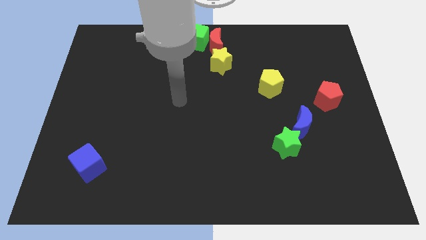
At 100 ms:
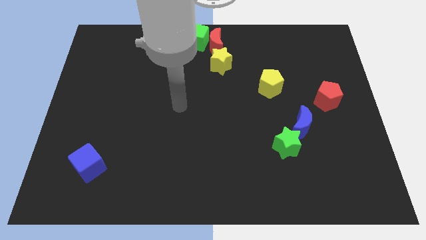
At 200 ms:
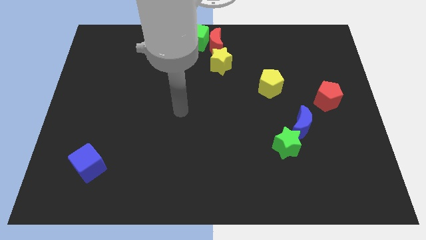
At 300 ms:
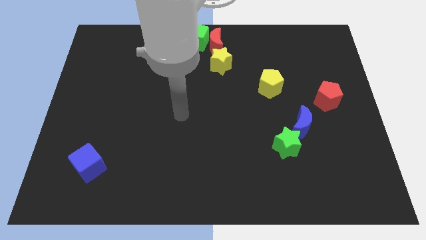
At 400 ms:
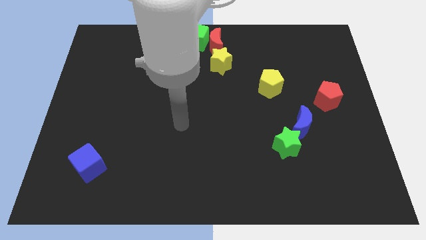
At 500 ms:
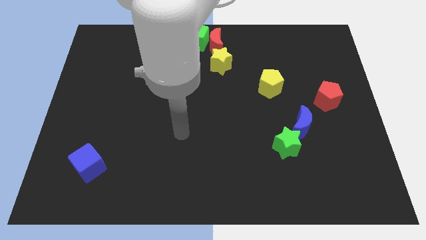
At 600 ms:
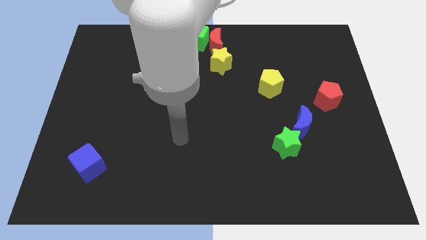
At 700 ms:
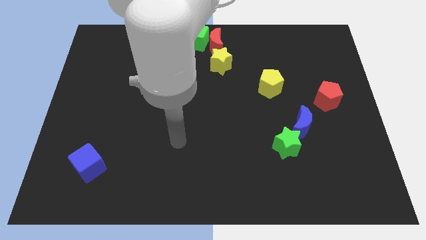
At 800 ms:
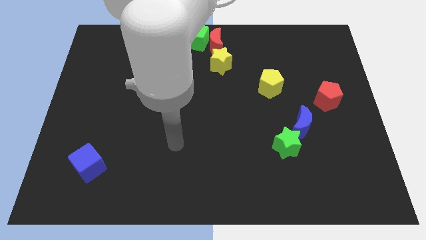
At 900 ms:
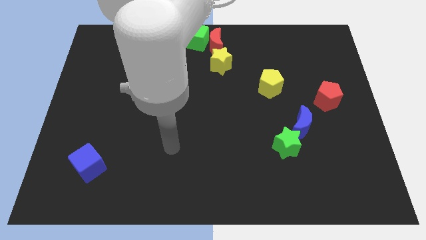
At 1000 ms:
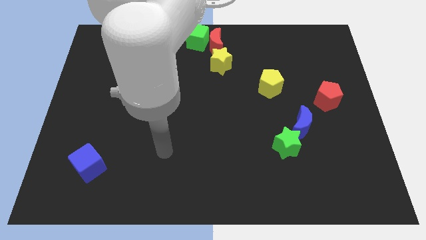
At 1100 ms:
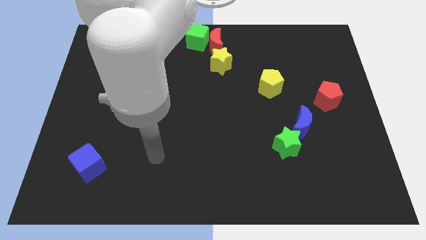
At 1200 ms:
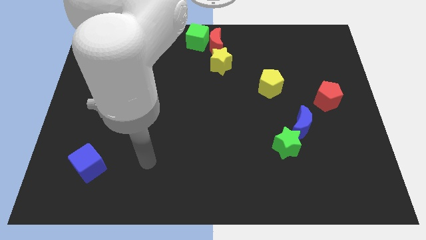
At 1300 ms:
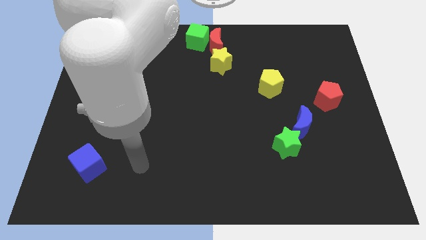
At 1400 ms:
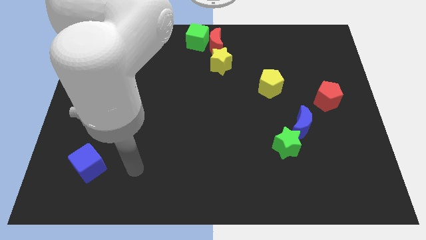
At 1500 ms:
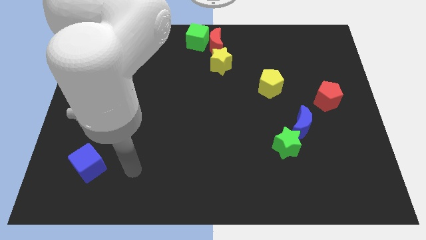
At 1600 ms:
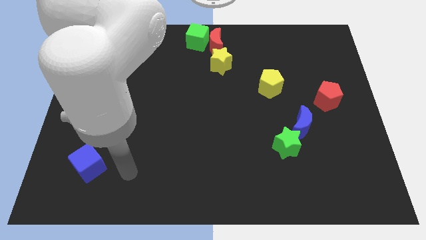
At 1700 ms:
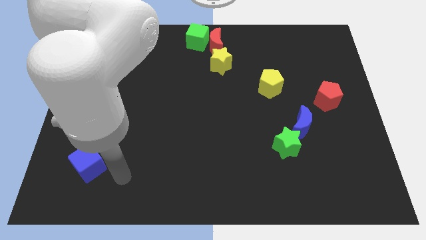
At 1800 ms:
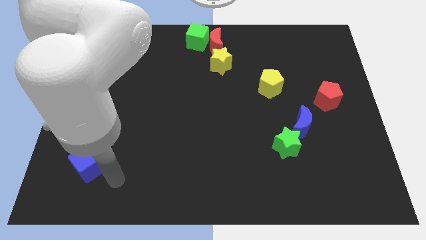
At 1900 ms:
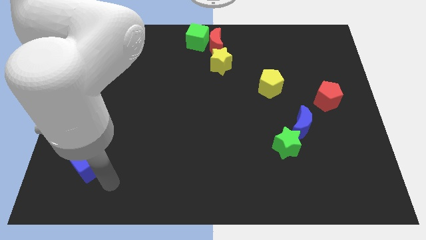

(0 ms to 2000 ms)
place blue cube to the right of the blue cube

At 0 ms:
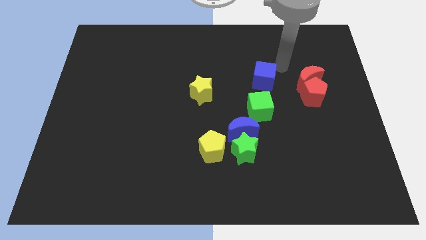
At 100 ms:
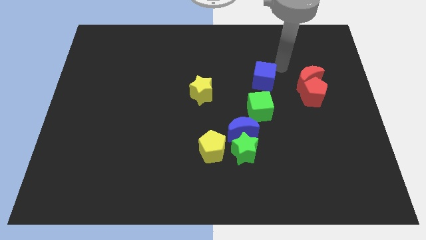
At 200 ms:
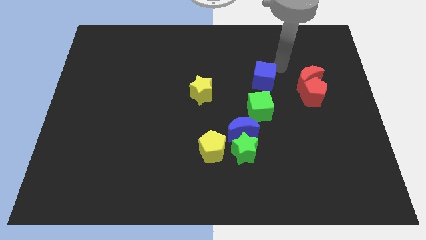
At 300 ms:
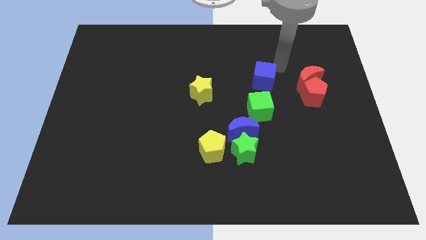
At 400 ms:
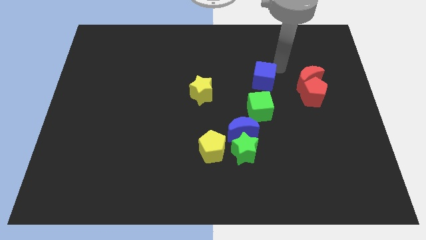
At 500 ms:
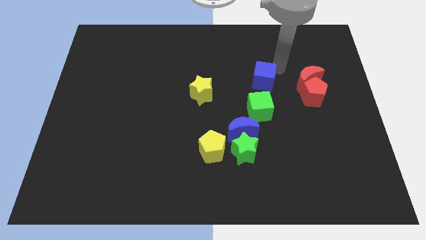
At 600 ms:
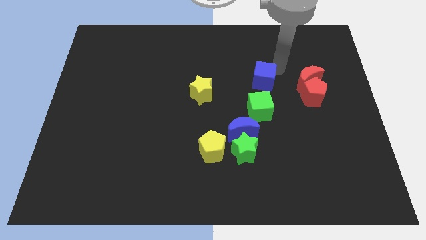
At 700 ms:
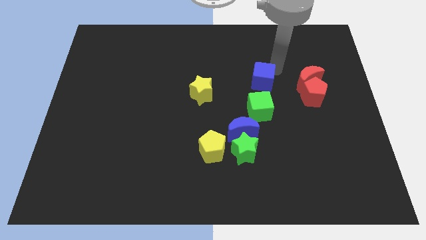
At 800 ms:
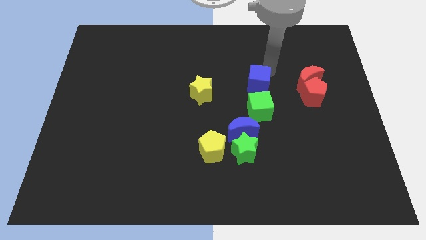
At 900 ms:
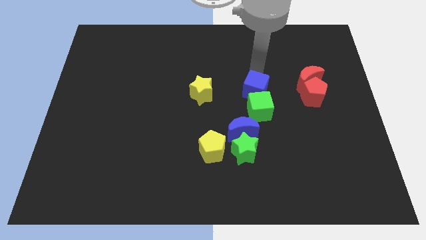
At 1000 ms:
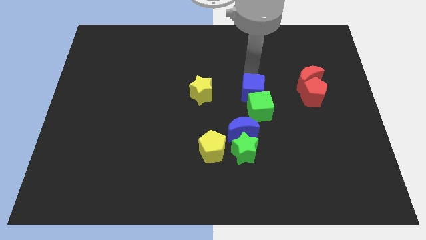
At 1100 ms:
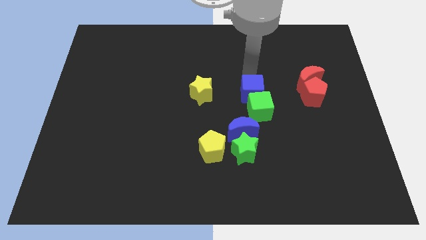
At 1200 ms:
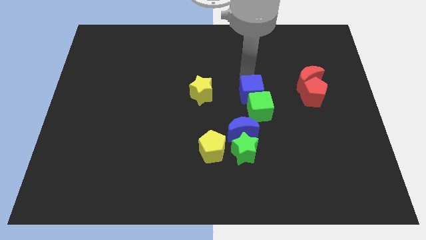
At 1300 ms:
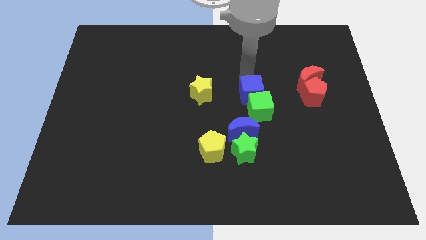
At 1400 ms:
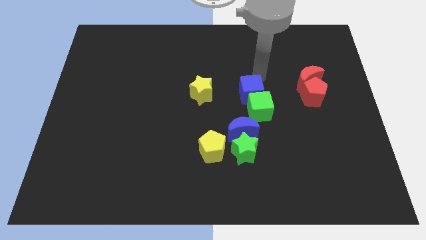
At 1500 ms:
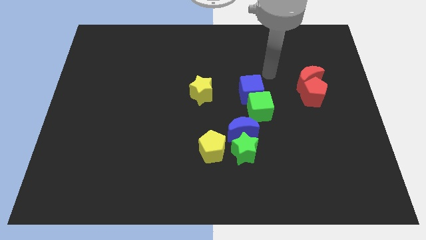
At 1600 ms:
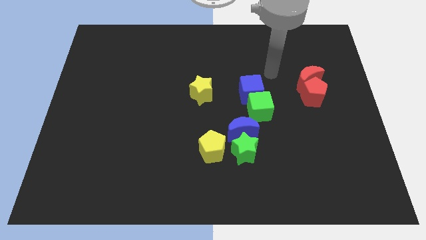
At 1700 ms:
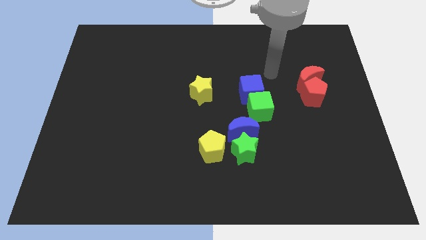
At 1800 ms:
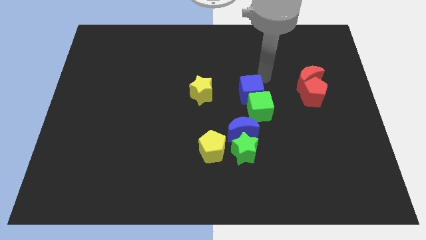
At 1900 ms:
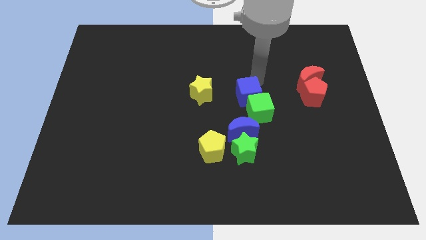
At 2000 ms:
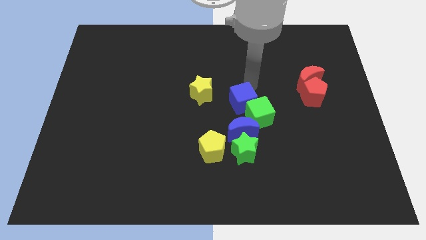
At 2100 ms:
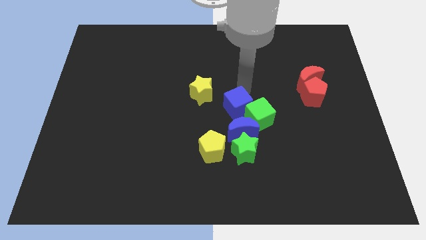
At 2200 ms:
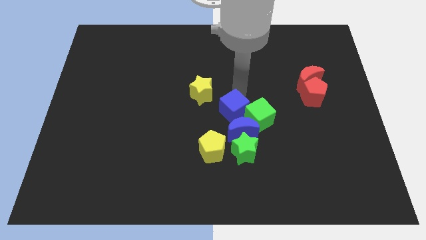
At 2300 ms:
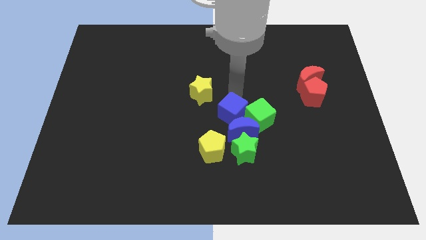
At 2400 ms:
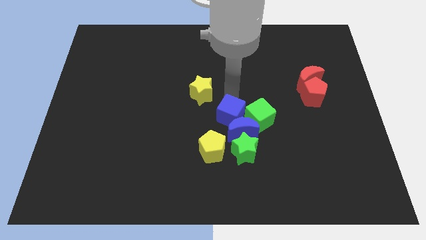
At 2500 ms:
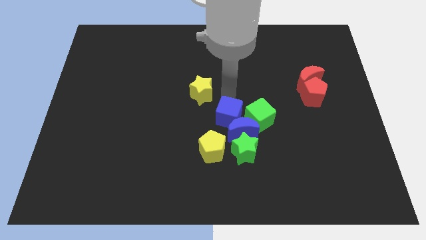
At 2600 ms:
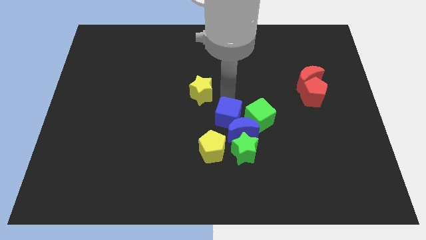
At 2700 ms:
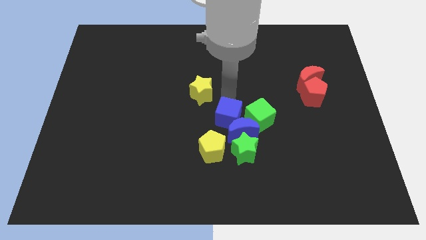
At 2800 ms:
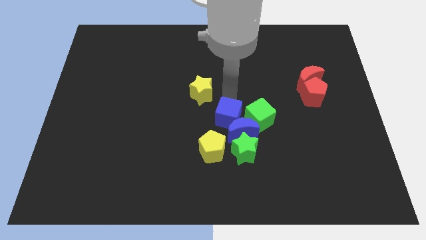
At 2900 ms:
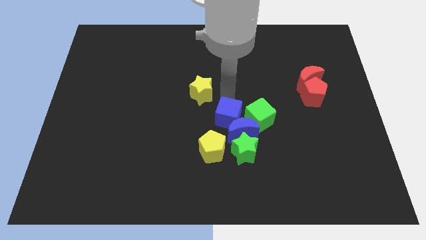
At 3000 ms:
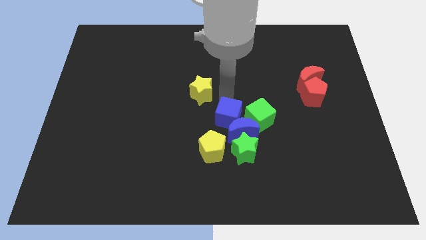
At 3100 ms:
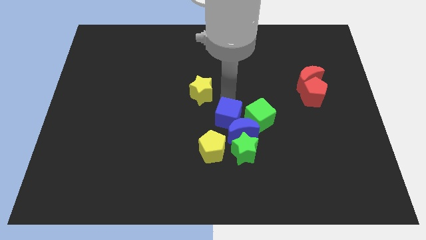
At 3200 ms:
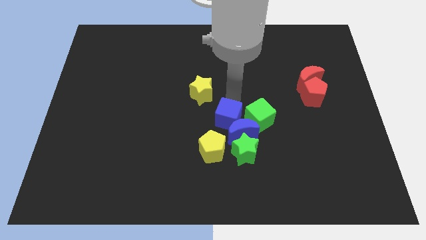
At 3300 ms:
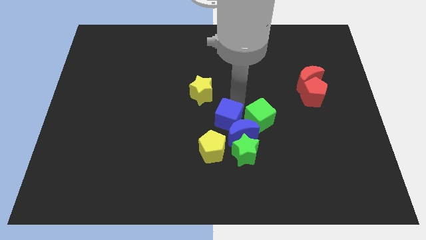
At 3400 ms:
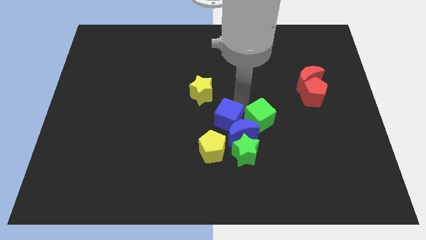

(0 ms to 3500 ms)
move the blue cube to the center of the board

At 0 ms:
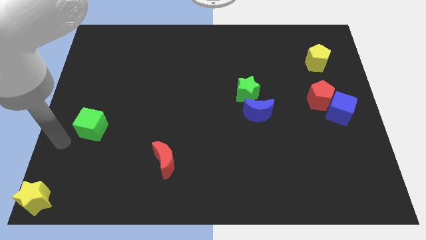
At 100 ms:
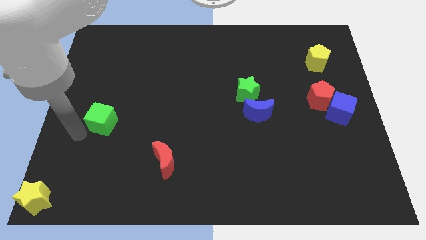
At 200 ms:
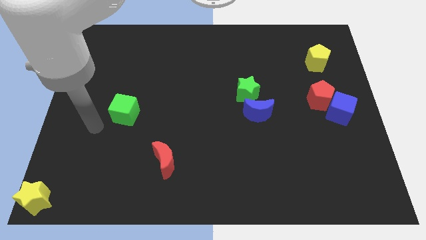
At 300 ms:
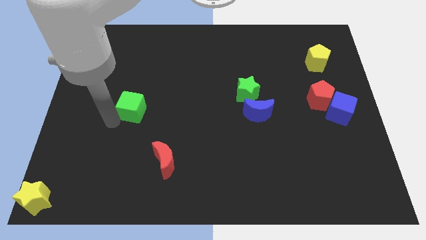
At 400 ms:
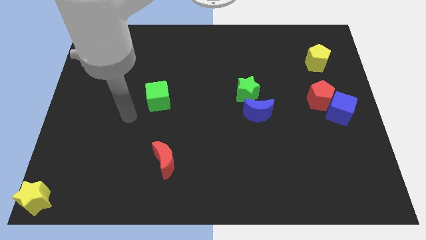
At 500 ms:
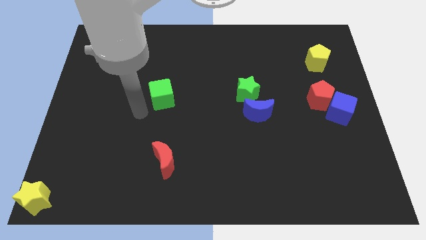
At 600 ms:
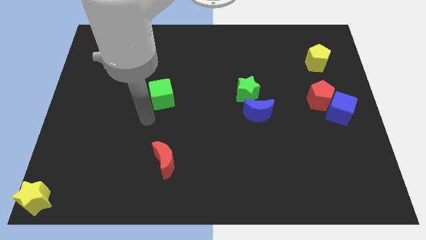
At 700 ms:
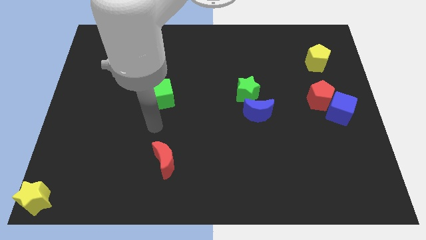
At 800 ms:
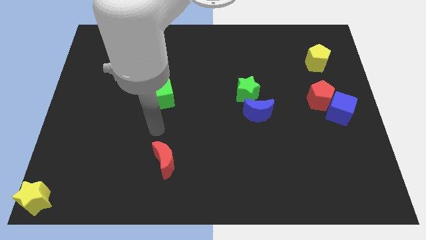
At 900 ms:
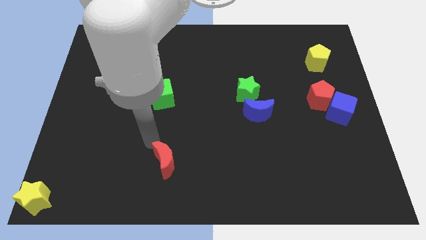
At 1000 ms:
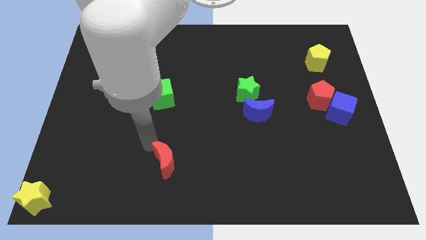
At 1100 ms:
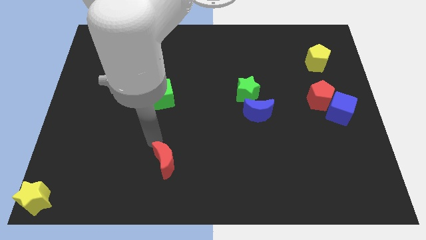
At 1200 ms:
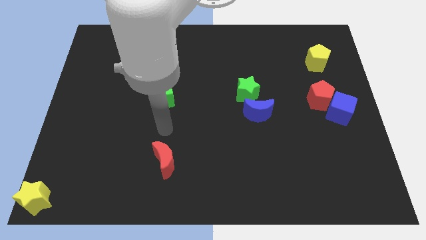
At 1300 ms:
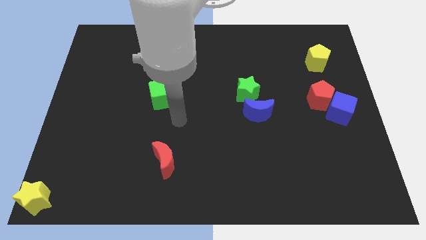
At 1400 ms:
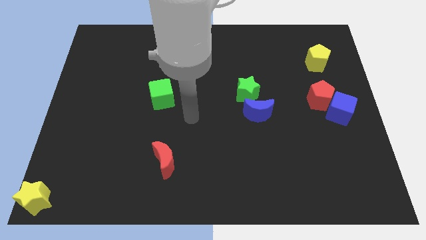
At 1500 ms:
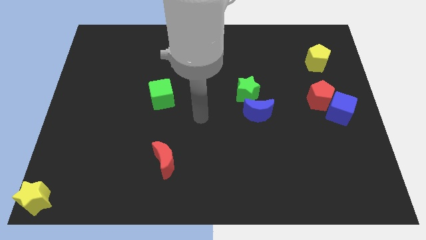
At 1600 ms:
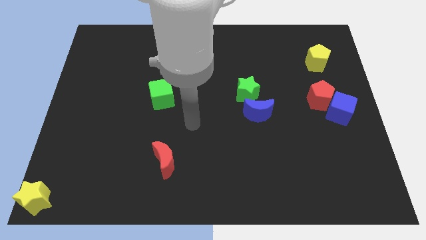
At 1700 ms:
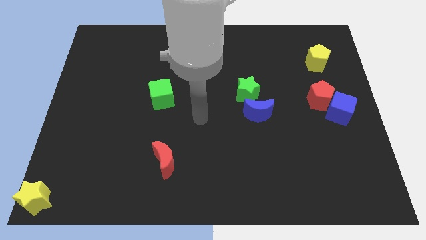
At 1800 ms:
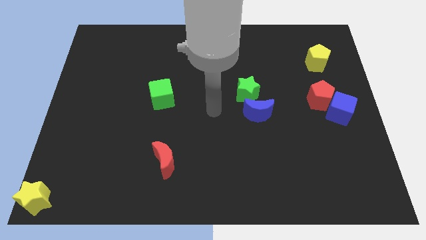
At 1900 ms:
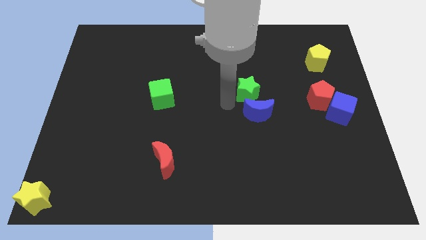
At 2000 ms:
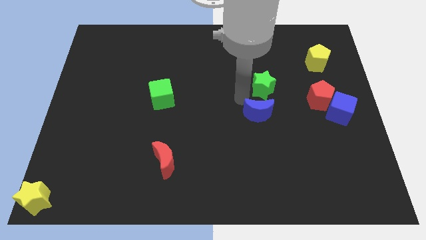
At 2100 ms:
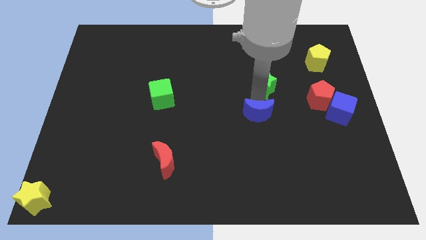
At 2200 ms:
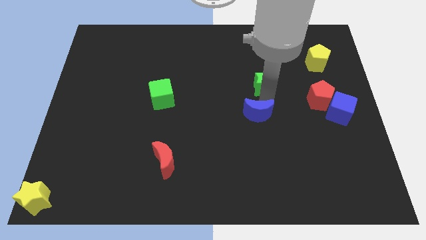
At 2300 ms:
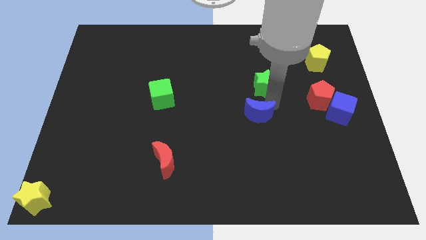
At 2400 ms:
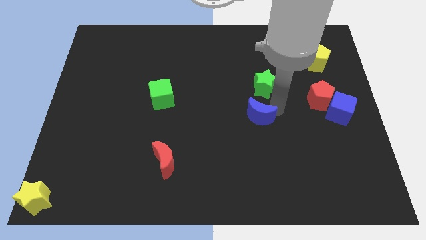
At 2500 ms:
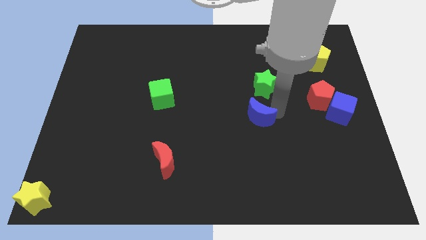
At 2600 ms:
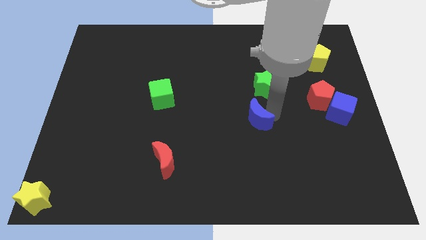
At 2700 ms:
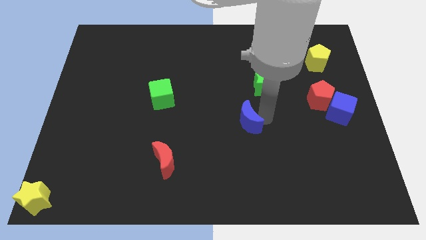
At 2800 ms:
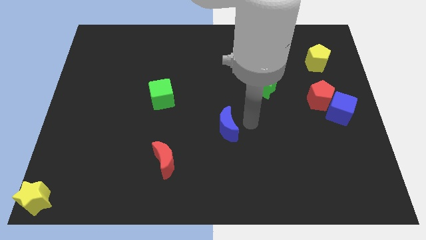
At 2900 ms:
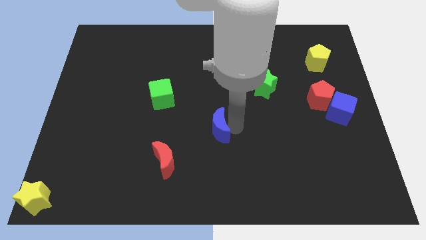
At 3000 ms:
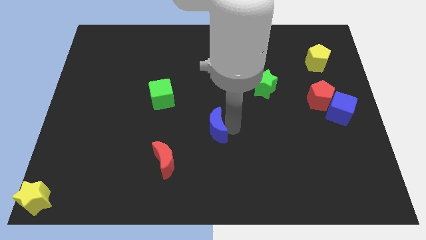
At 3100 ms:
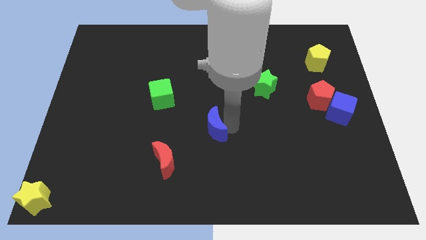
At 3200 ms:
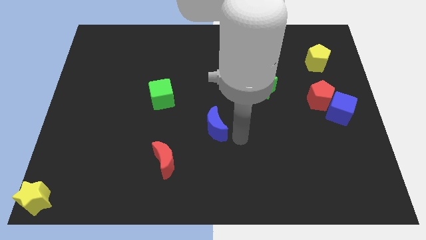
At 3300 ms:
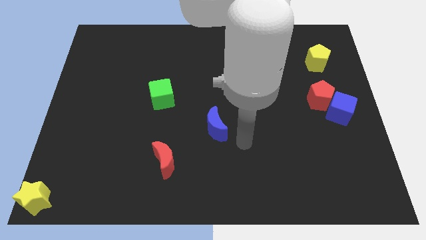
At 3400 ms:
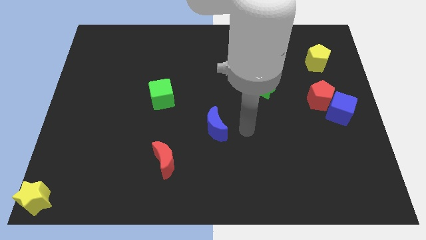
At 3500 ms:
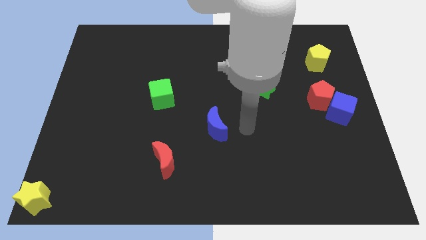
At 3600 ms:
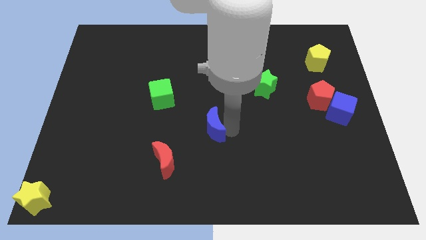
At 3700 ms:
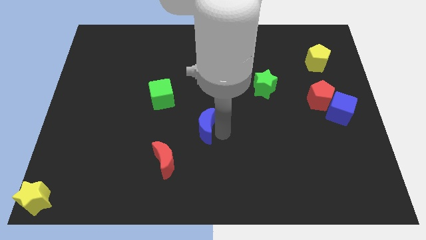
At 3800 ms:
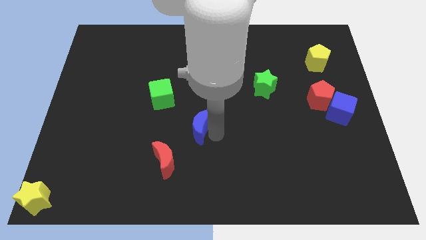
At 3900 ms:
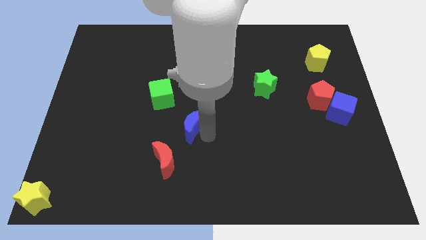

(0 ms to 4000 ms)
put the blue moon diagonally at the bottom right of the green cube
